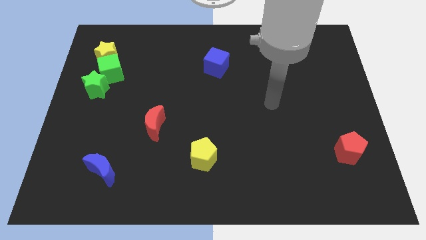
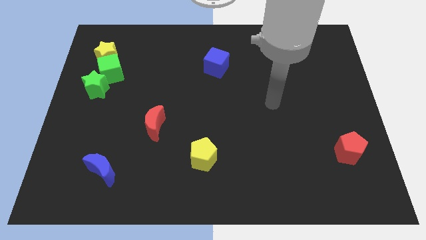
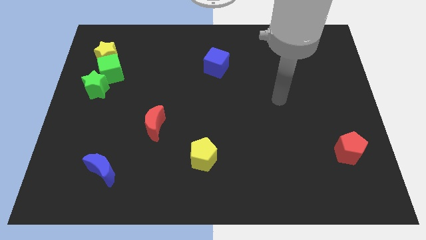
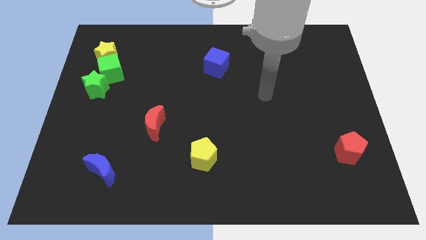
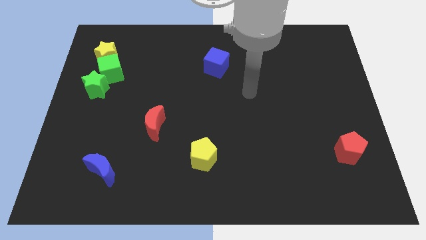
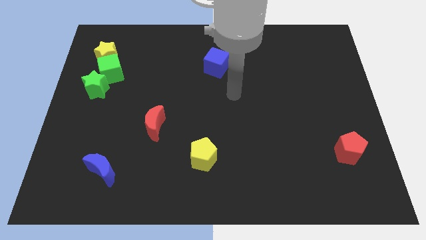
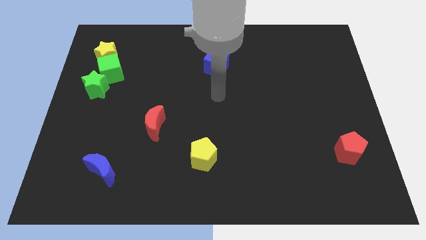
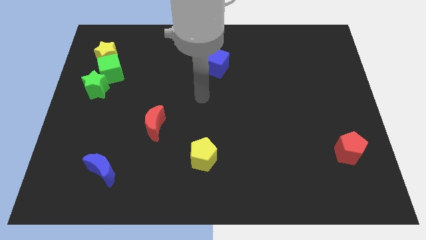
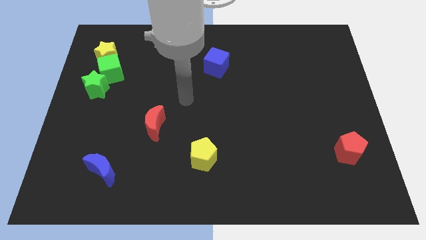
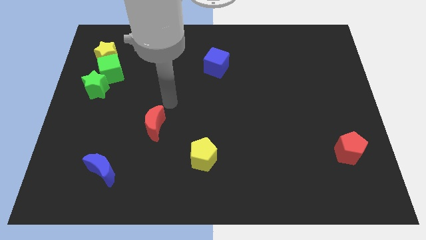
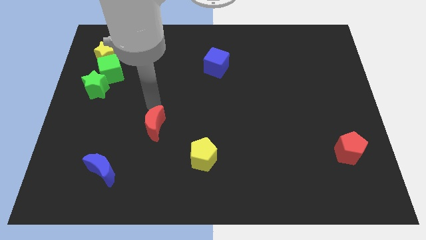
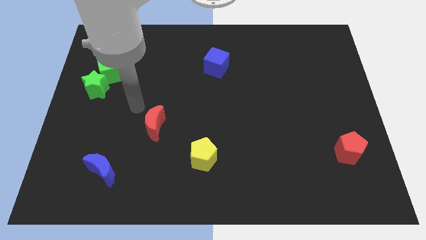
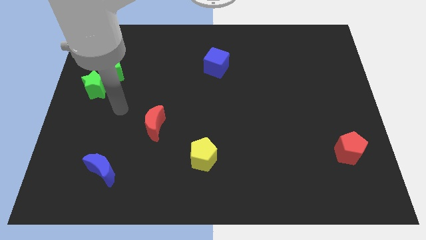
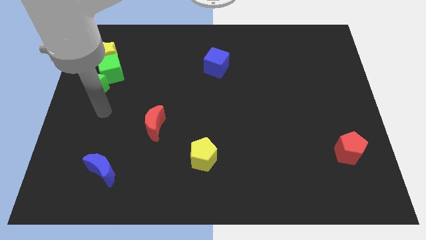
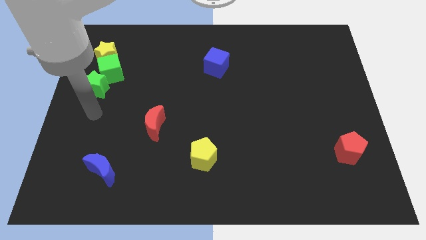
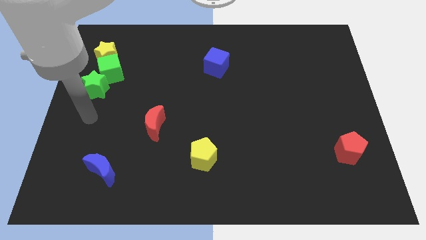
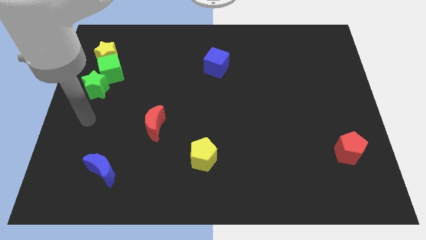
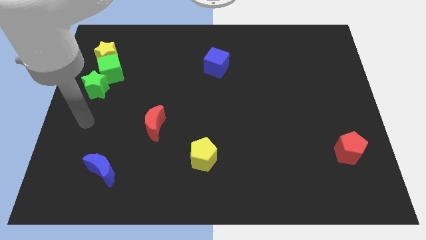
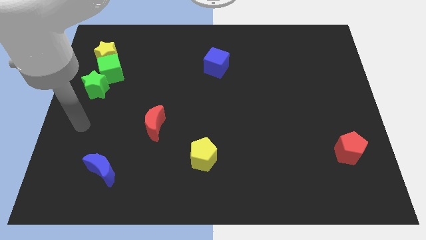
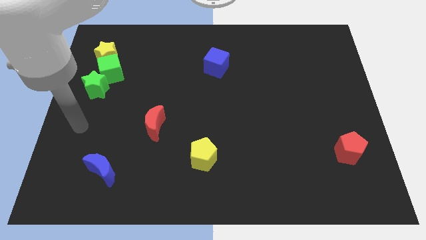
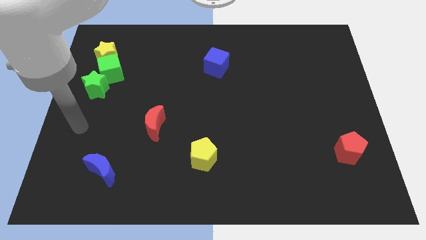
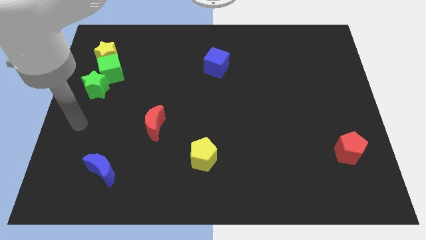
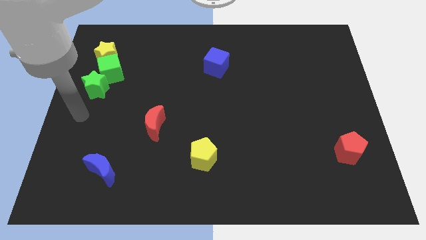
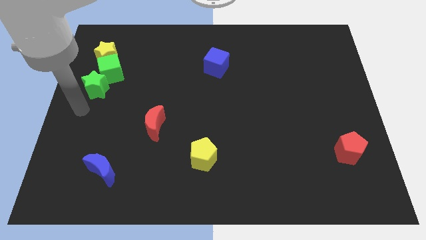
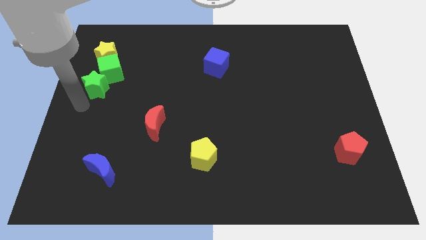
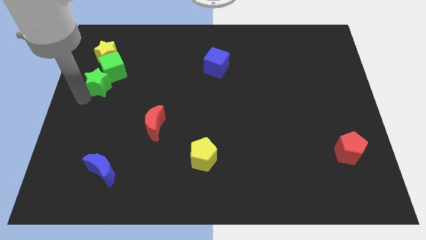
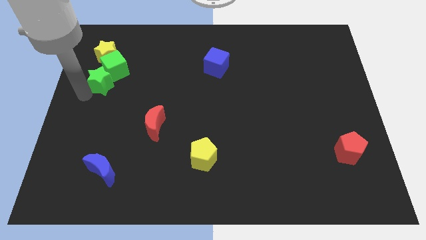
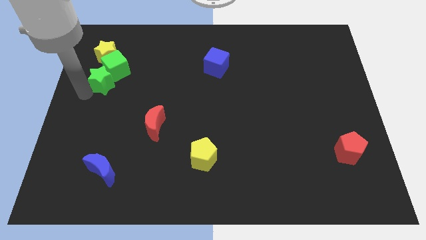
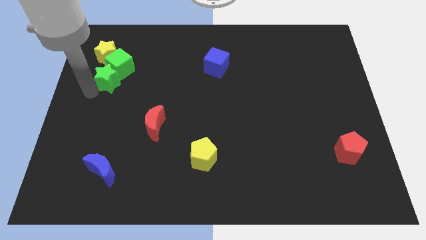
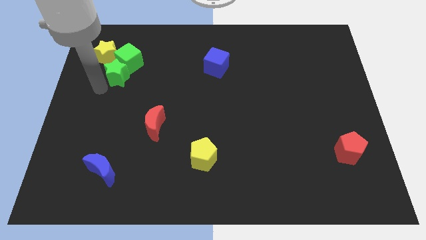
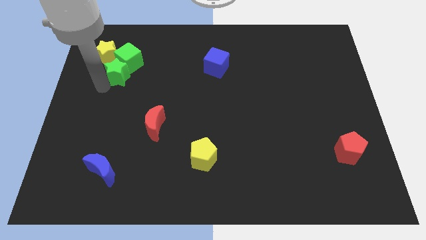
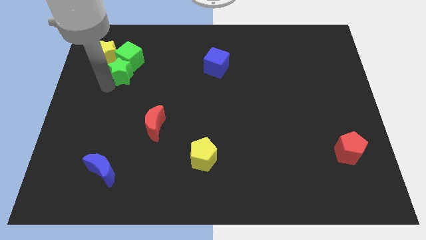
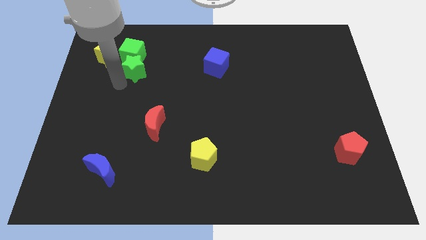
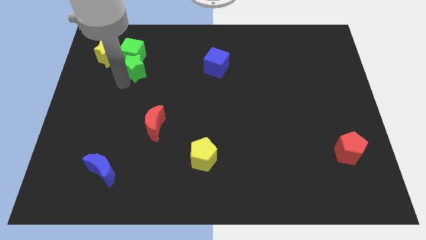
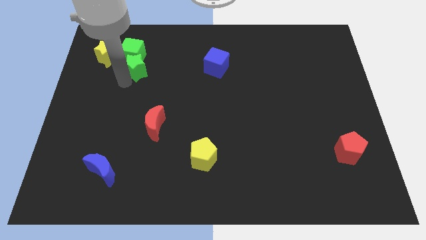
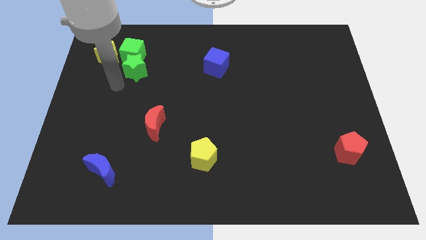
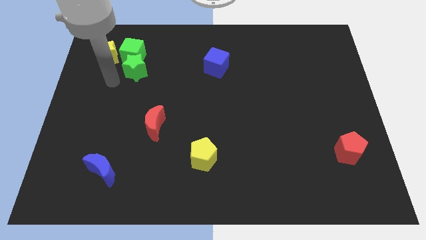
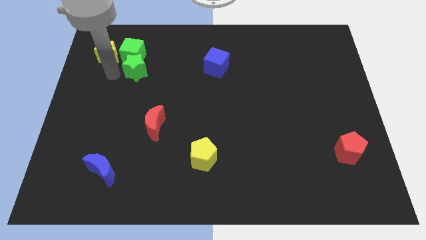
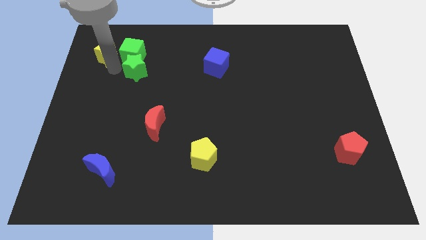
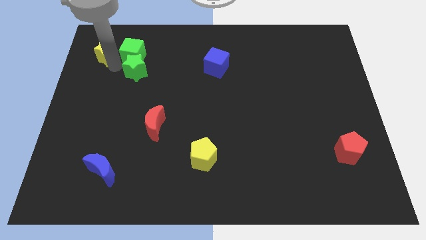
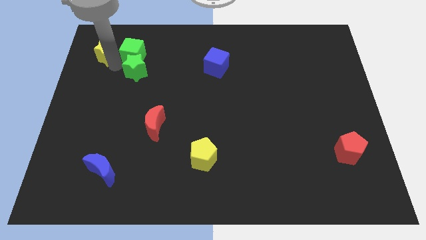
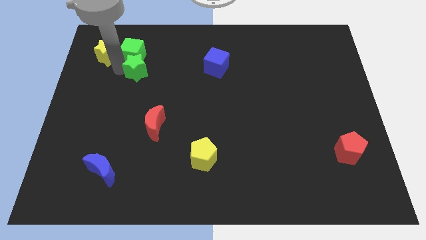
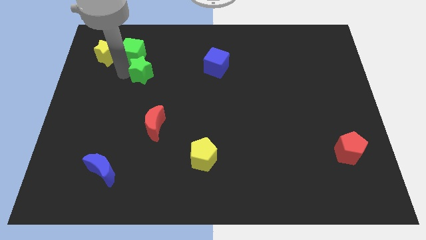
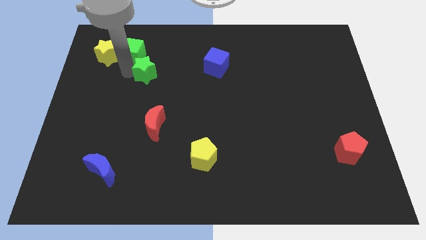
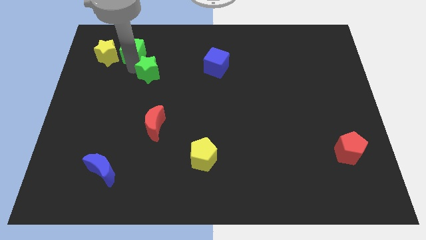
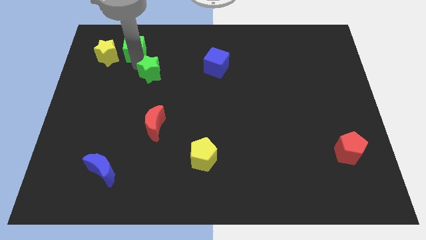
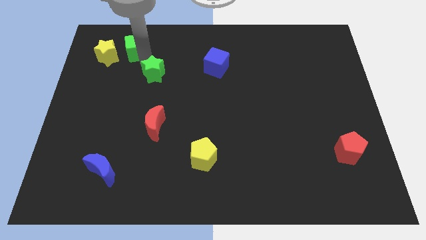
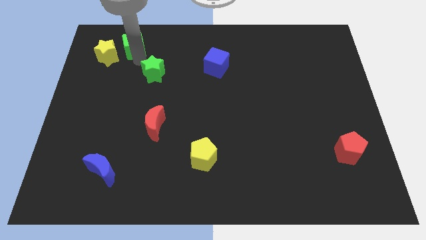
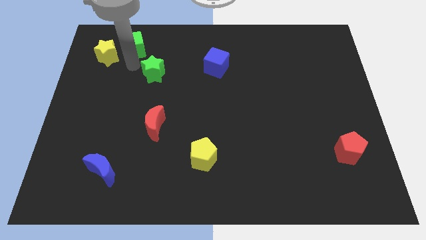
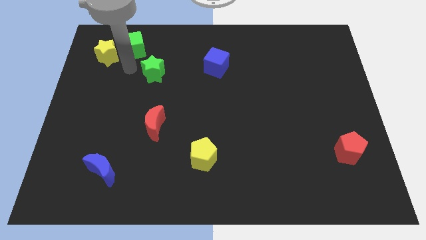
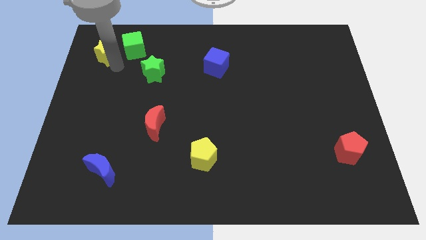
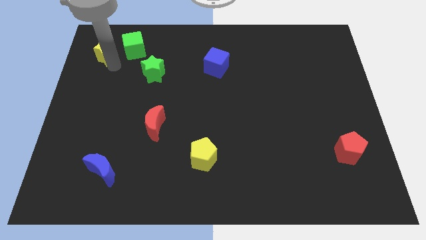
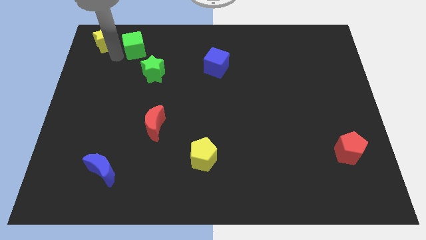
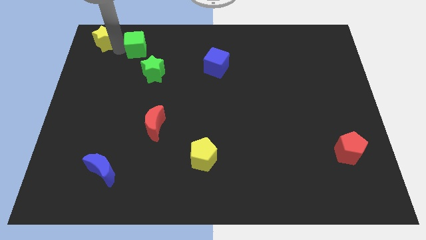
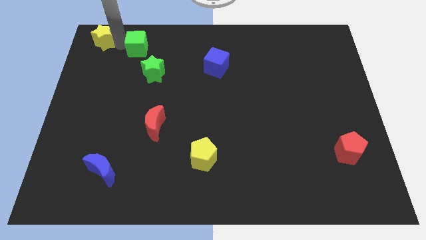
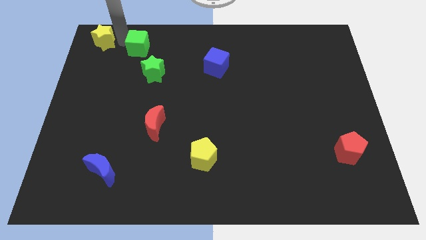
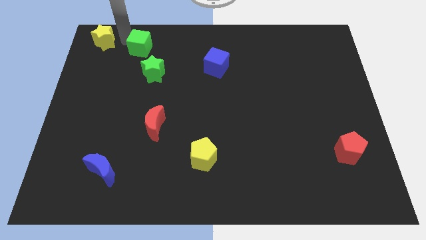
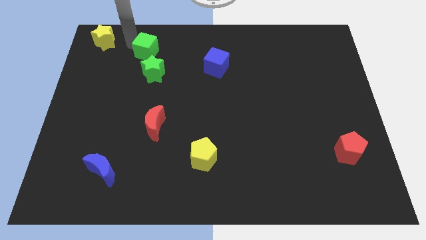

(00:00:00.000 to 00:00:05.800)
separate the green blocks from the yellow star

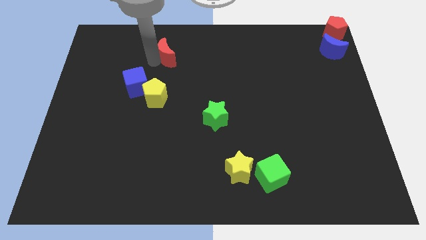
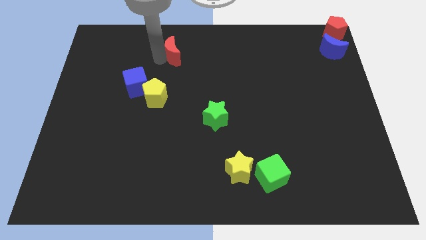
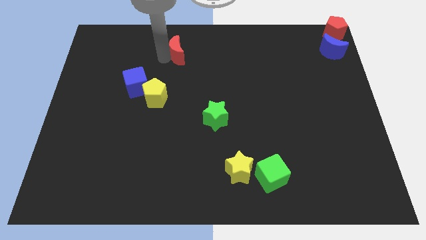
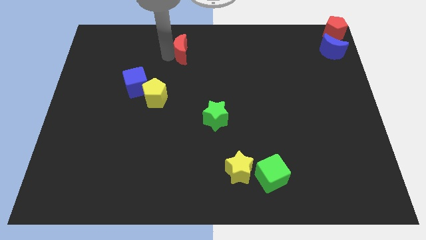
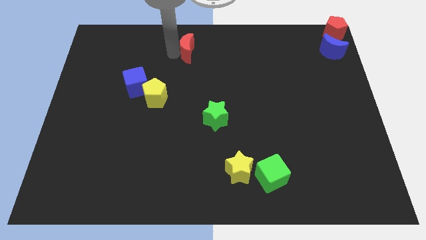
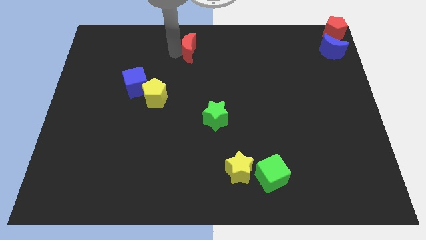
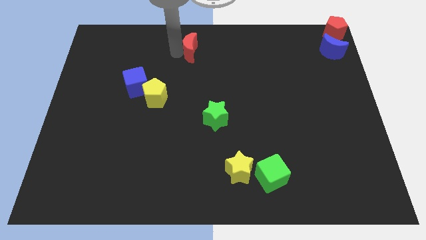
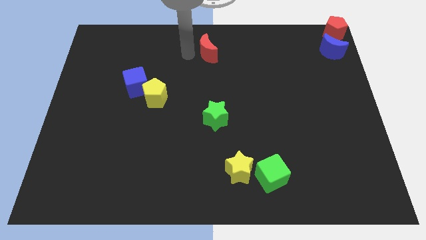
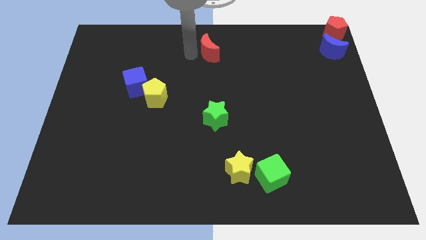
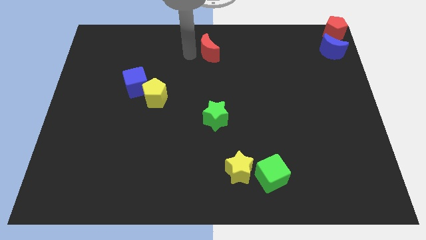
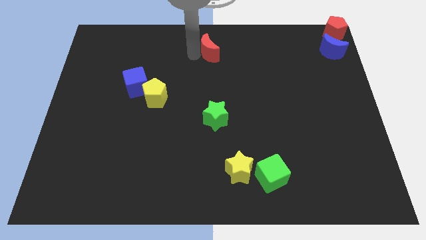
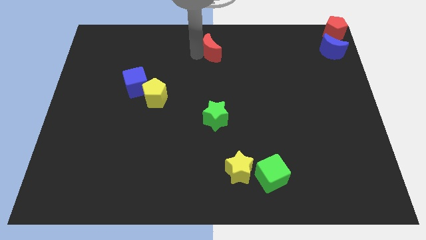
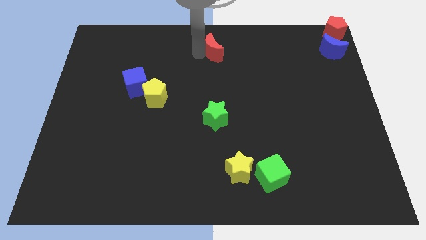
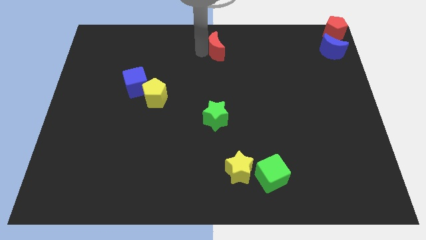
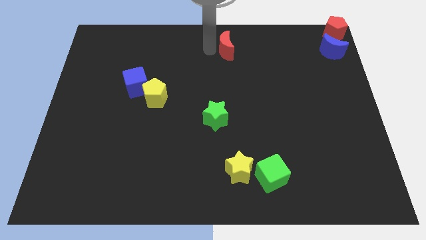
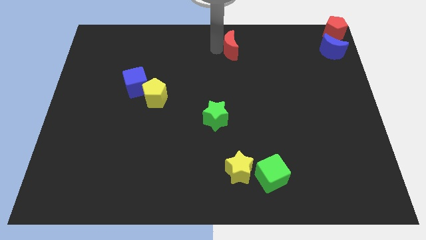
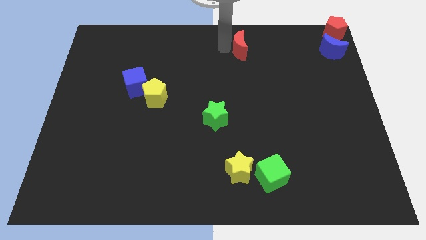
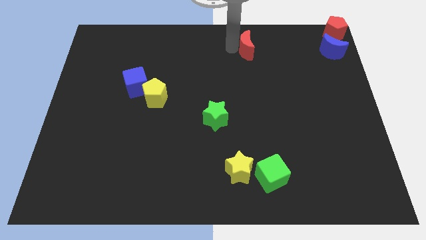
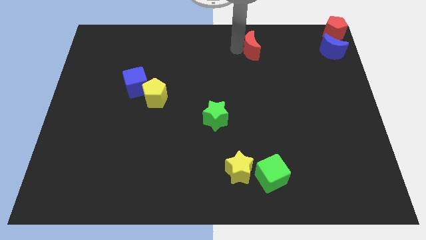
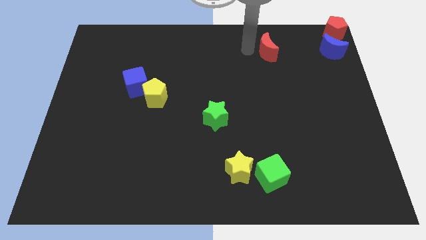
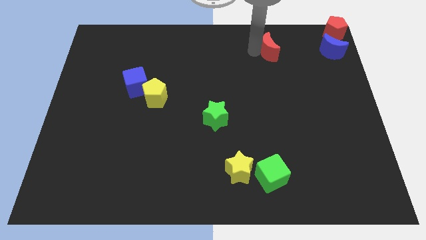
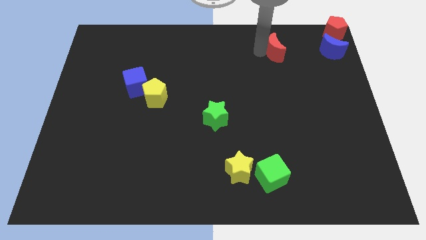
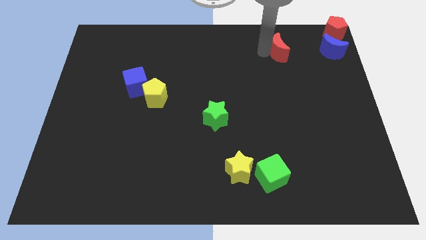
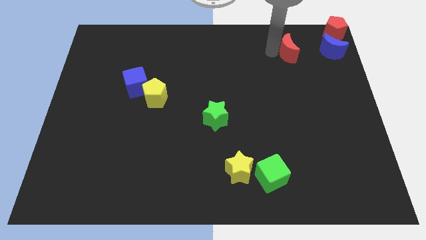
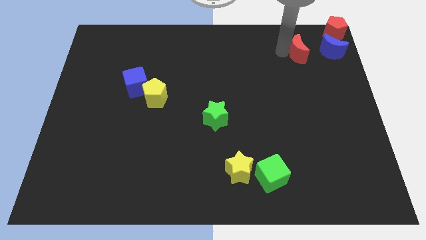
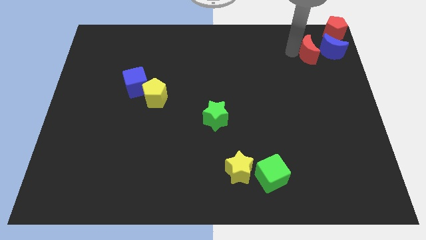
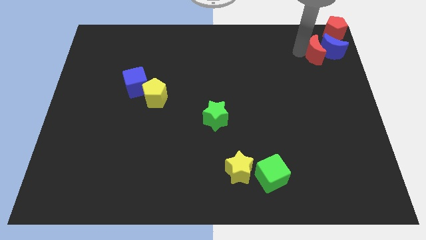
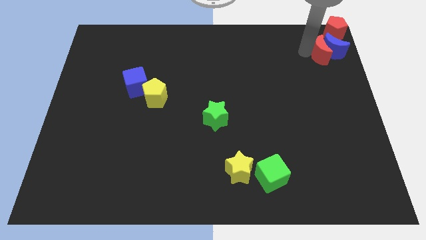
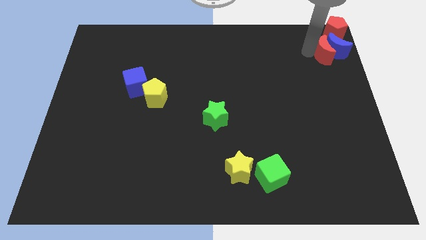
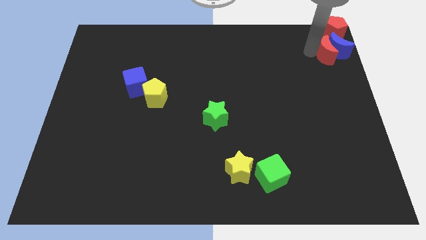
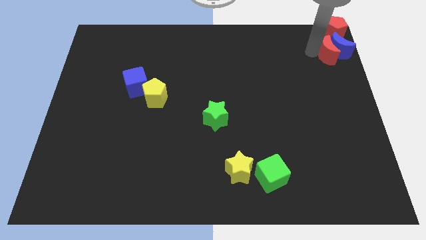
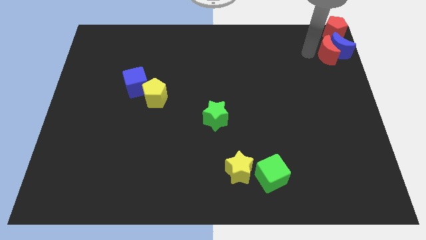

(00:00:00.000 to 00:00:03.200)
push the red crescent into the blue crescent
